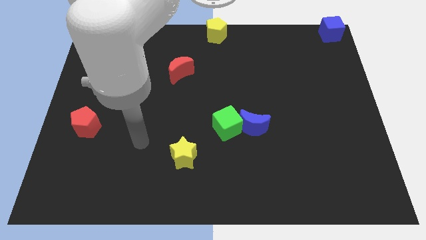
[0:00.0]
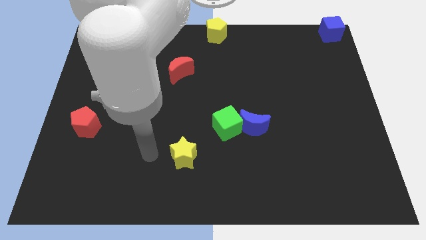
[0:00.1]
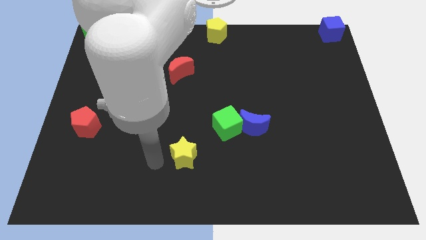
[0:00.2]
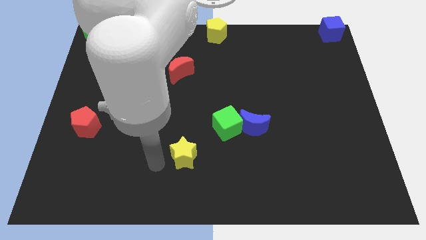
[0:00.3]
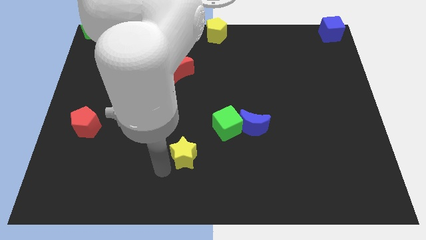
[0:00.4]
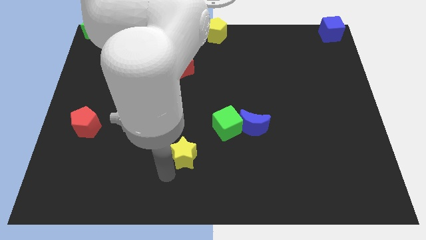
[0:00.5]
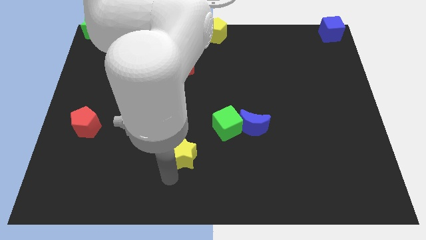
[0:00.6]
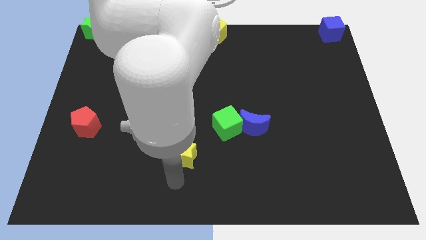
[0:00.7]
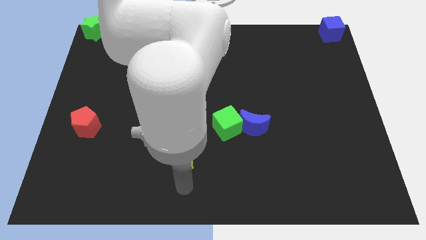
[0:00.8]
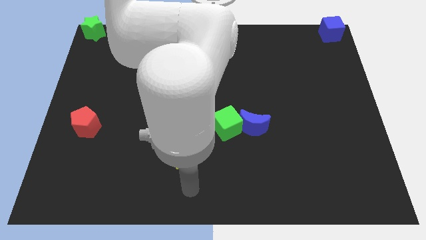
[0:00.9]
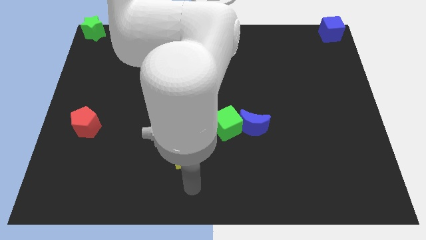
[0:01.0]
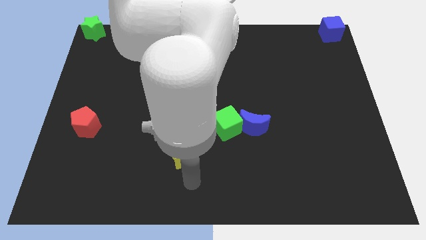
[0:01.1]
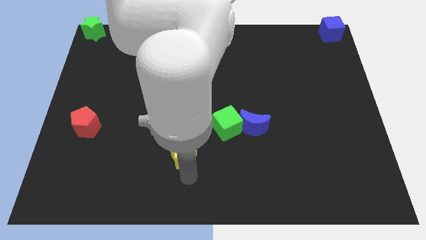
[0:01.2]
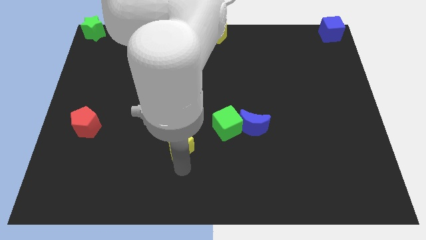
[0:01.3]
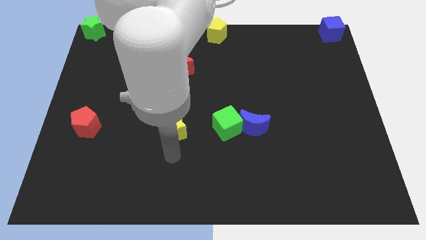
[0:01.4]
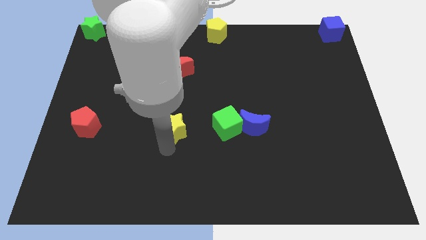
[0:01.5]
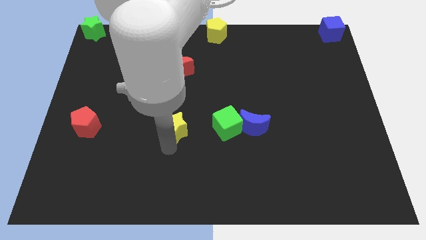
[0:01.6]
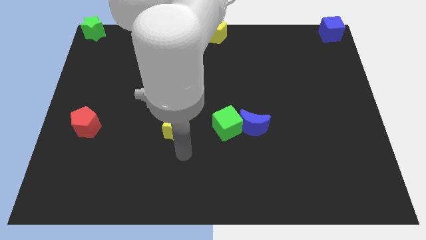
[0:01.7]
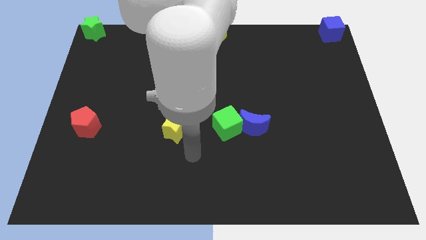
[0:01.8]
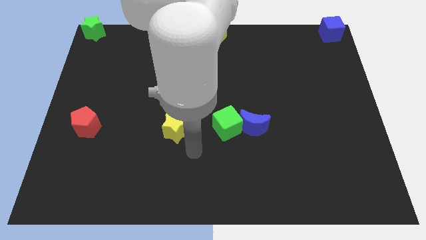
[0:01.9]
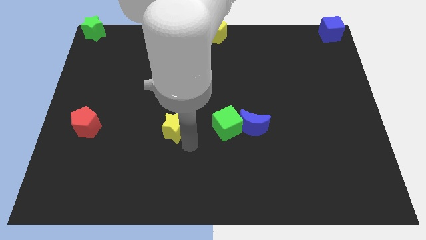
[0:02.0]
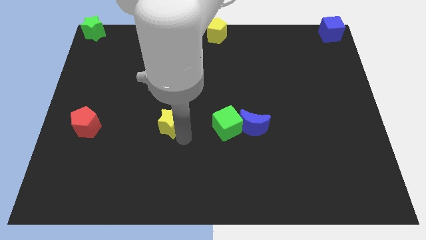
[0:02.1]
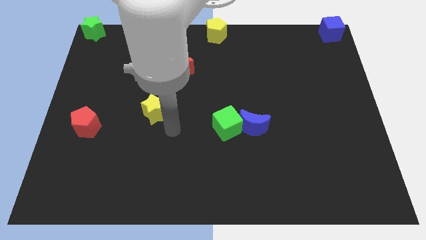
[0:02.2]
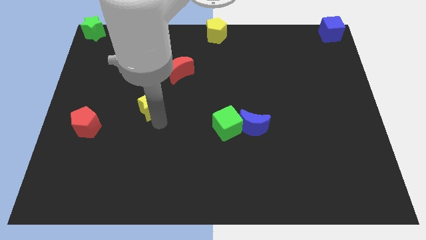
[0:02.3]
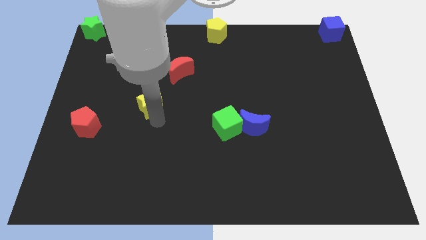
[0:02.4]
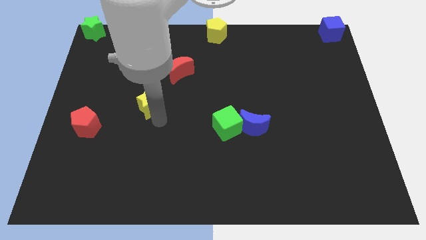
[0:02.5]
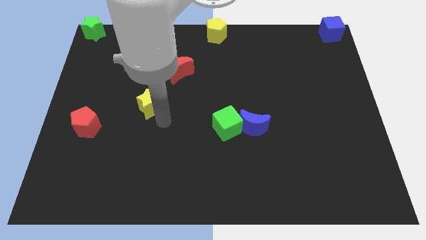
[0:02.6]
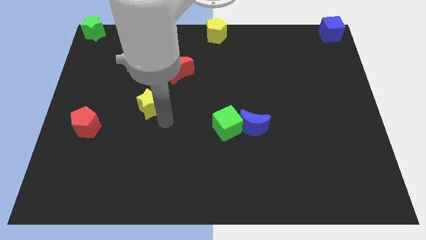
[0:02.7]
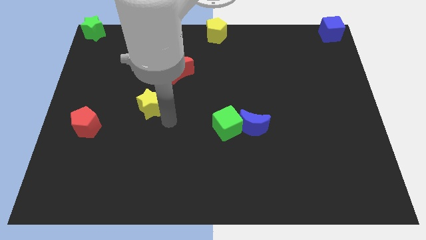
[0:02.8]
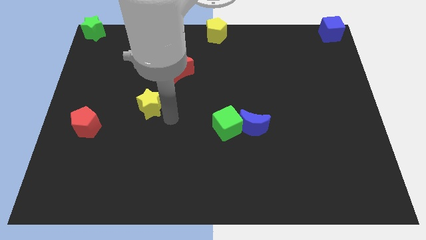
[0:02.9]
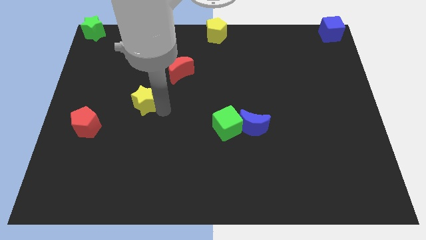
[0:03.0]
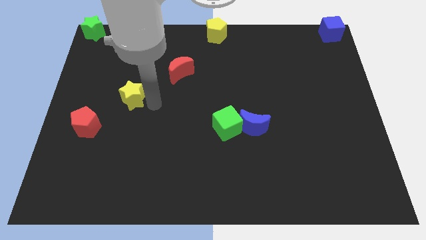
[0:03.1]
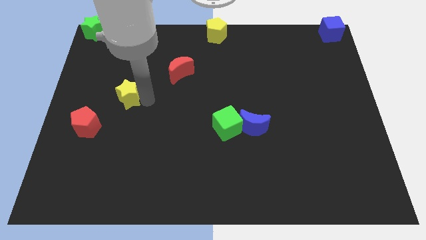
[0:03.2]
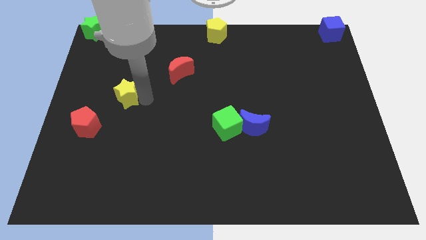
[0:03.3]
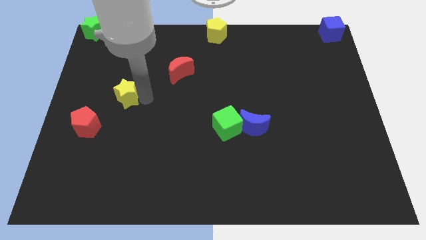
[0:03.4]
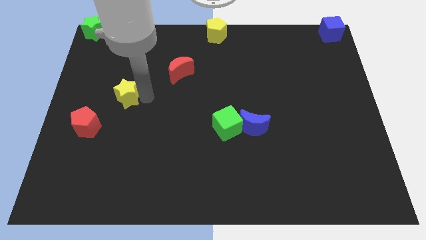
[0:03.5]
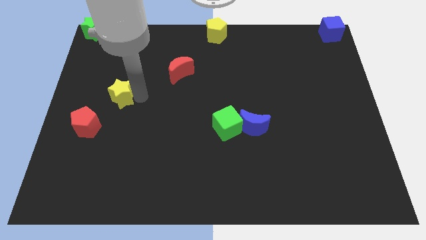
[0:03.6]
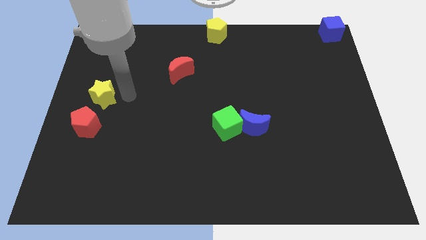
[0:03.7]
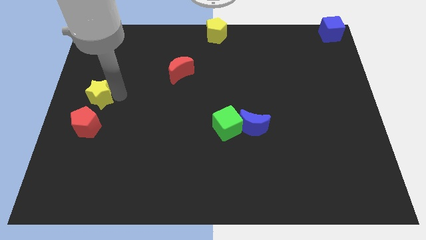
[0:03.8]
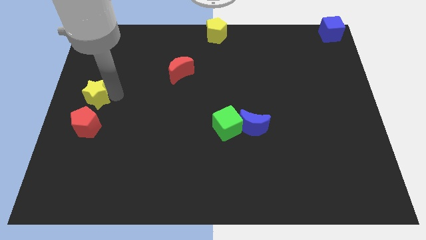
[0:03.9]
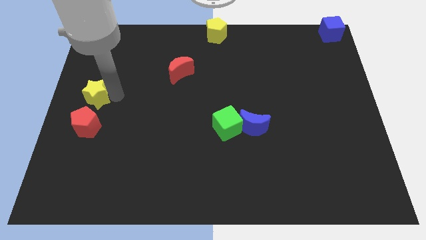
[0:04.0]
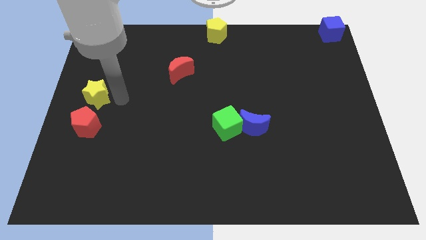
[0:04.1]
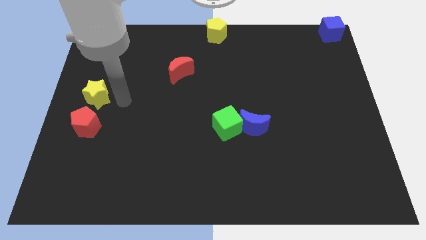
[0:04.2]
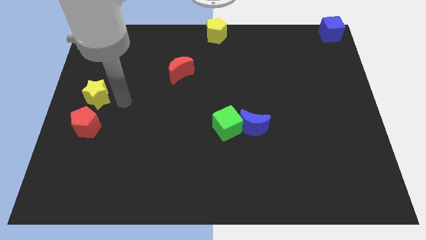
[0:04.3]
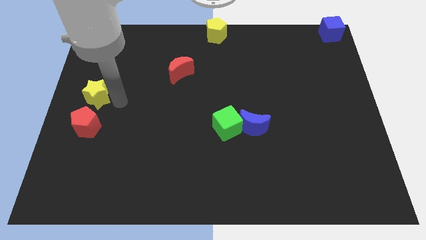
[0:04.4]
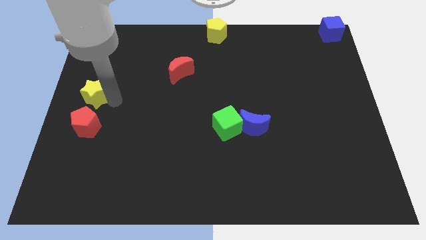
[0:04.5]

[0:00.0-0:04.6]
put the yellow star to the top side of the red pentagon

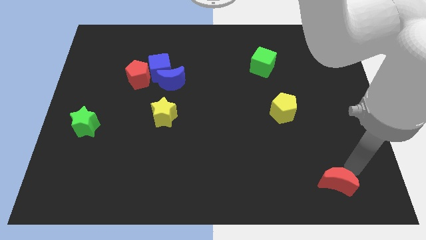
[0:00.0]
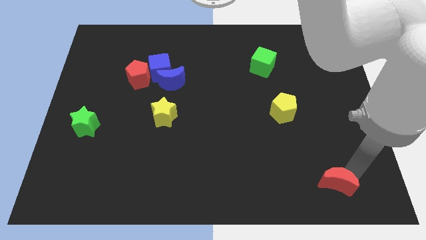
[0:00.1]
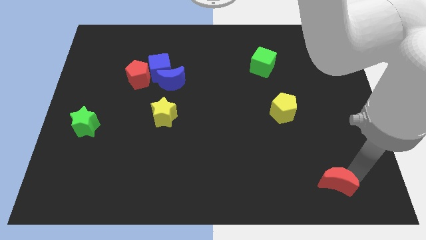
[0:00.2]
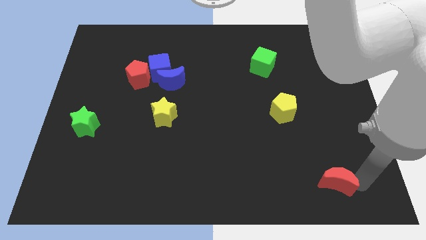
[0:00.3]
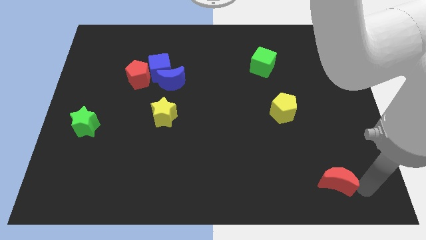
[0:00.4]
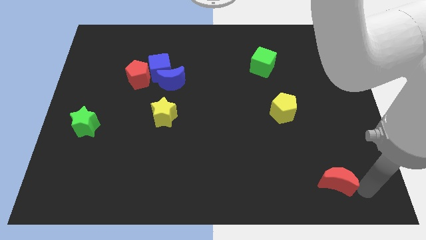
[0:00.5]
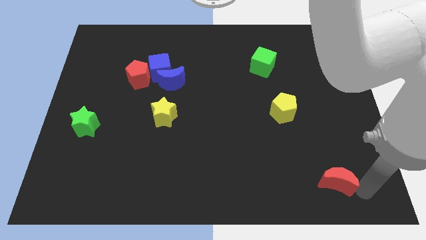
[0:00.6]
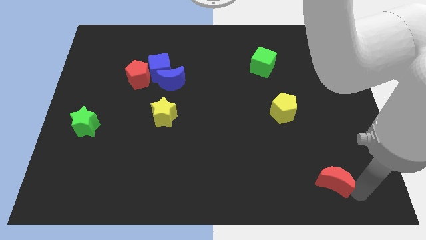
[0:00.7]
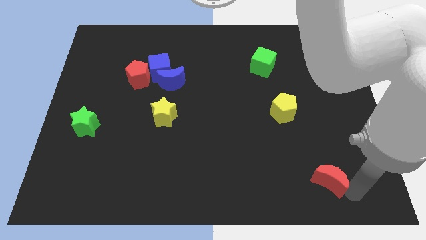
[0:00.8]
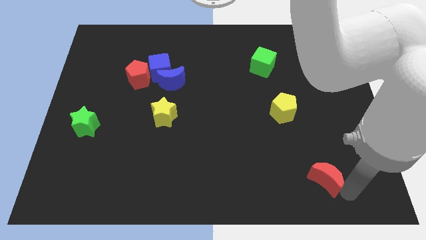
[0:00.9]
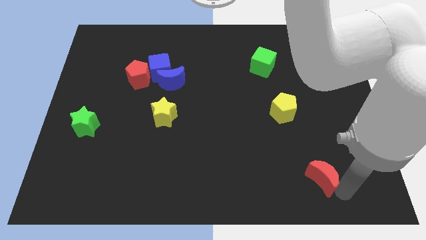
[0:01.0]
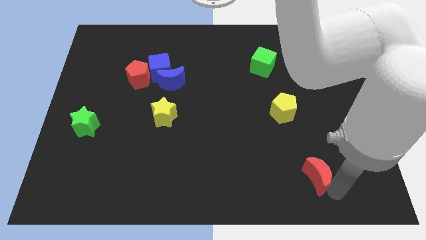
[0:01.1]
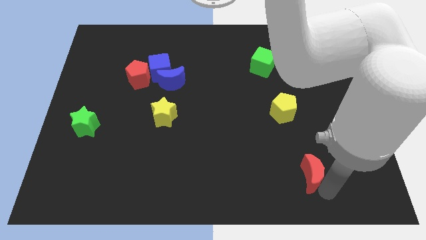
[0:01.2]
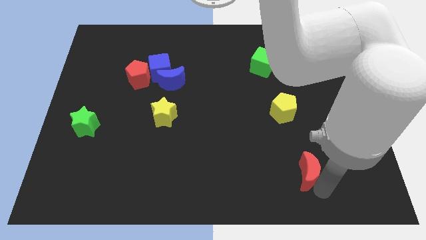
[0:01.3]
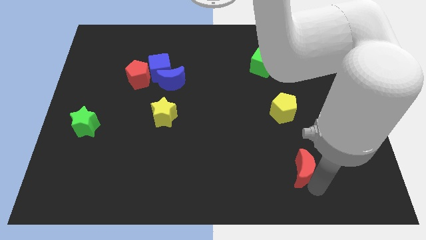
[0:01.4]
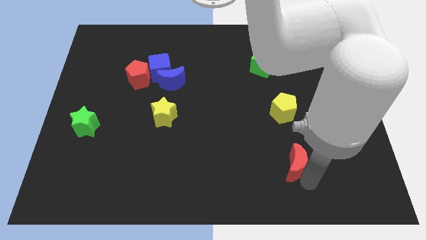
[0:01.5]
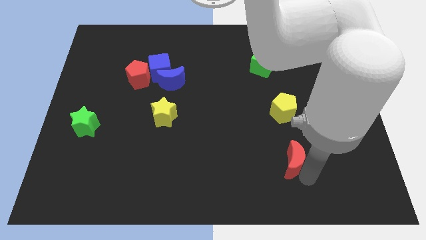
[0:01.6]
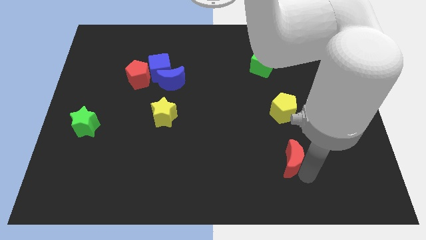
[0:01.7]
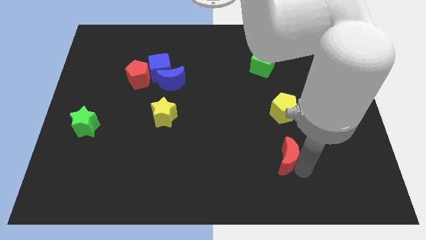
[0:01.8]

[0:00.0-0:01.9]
drag the red crescent to the bottom side of the yellow pentagon

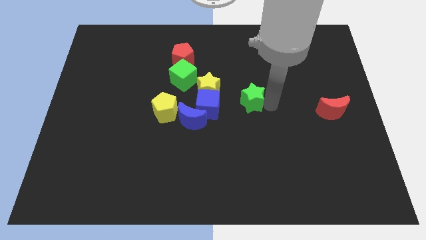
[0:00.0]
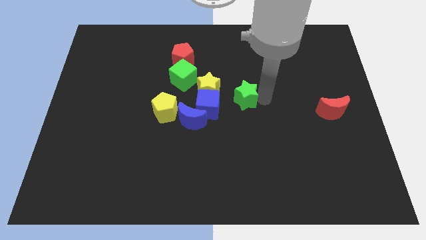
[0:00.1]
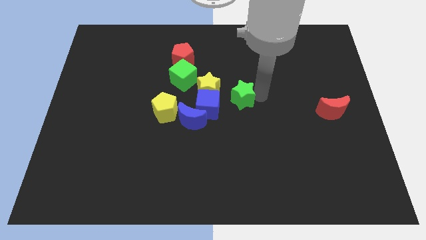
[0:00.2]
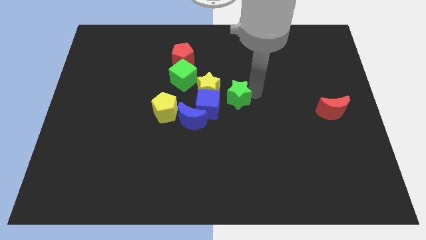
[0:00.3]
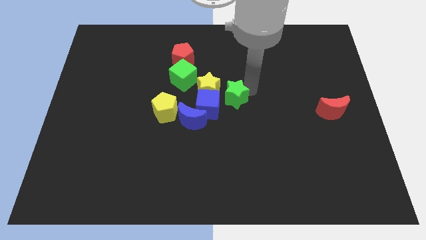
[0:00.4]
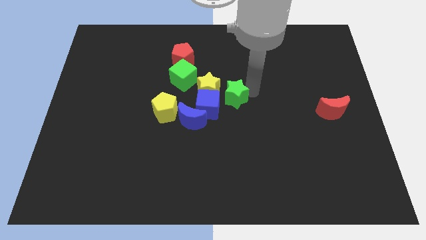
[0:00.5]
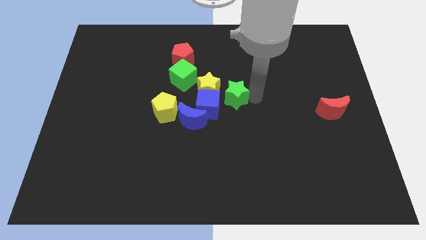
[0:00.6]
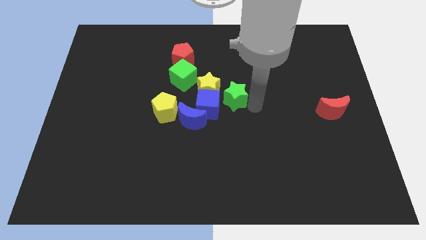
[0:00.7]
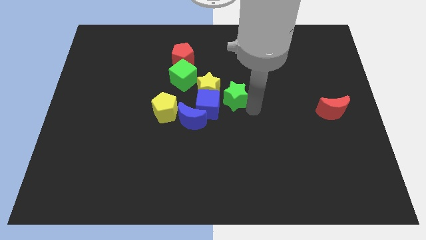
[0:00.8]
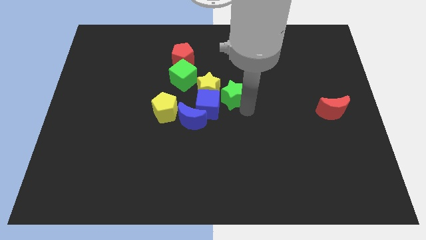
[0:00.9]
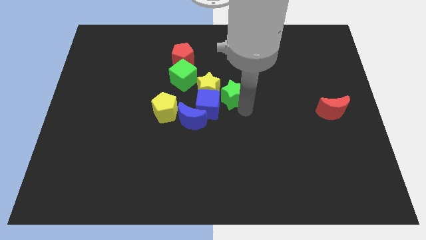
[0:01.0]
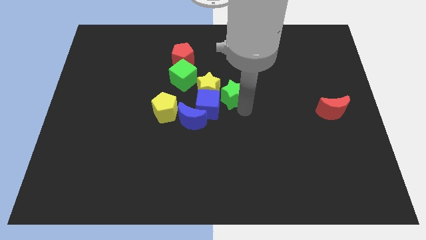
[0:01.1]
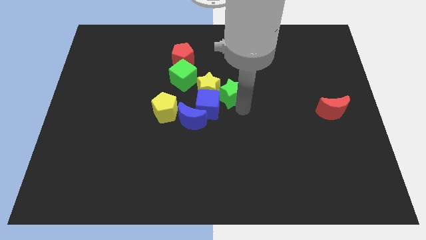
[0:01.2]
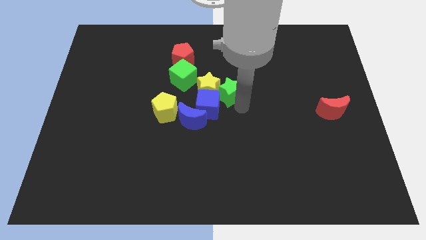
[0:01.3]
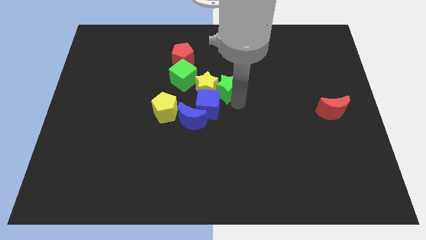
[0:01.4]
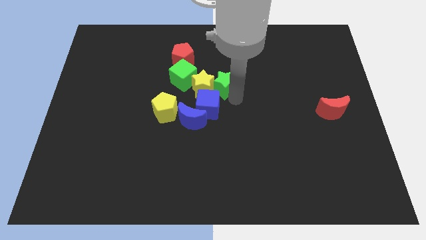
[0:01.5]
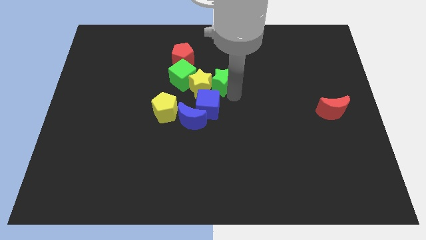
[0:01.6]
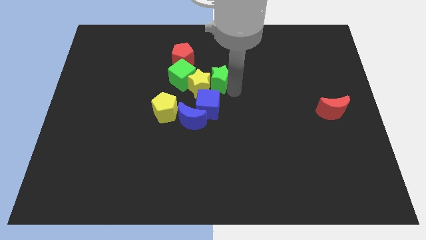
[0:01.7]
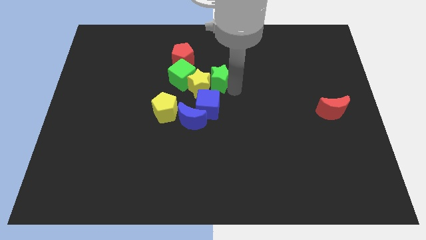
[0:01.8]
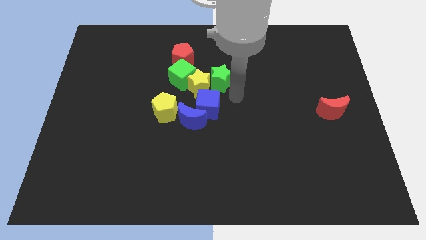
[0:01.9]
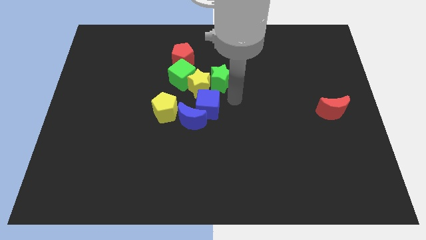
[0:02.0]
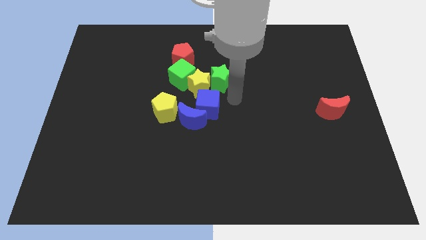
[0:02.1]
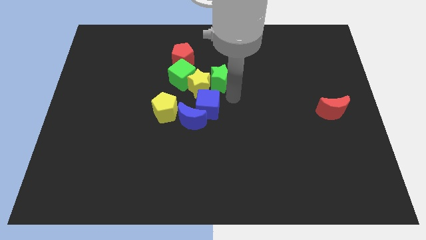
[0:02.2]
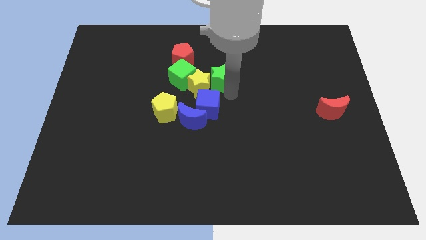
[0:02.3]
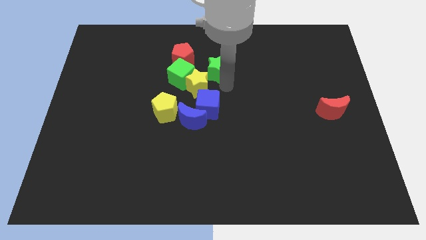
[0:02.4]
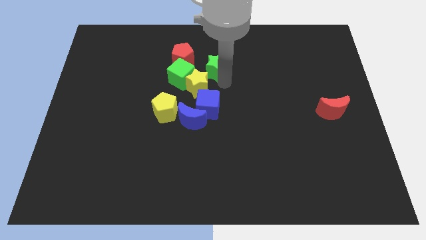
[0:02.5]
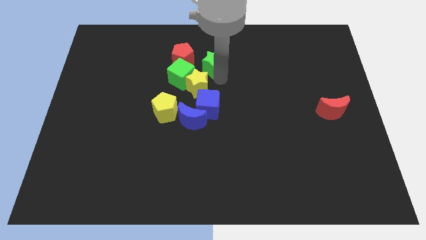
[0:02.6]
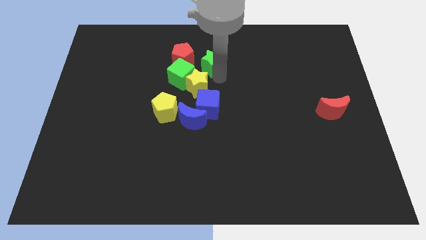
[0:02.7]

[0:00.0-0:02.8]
push the green star into the group of blocks
